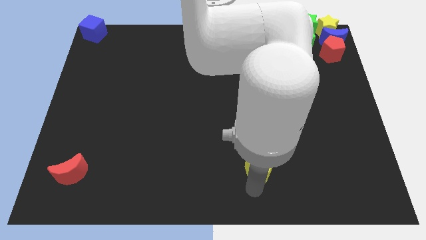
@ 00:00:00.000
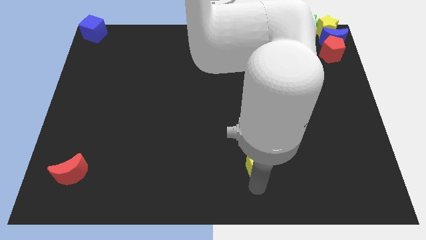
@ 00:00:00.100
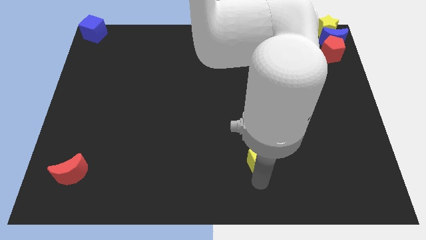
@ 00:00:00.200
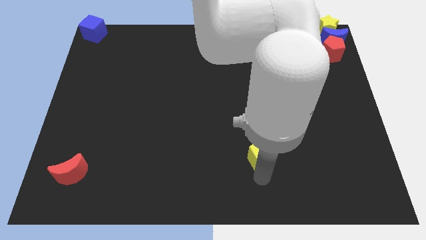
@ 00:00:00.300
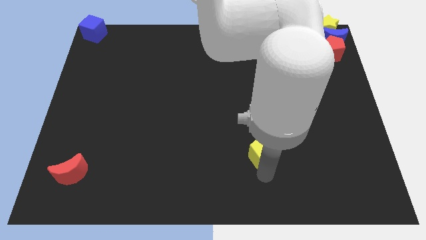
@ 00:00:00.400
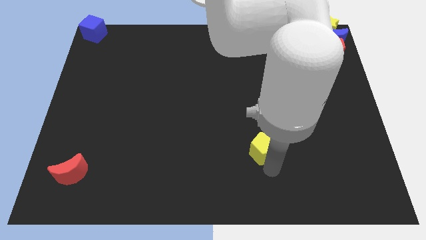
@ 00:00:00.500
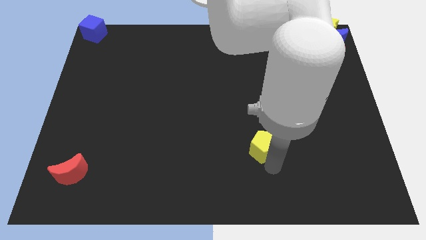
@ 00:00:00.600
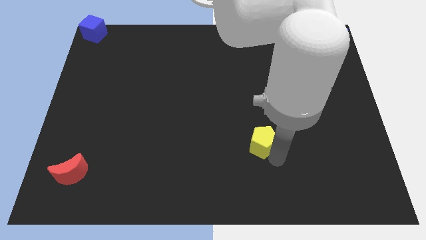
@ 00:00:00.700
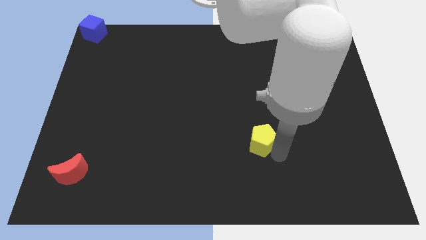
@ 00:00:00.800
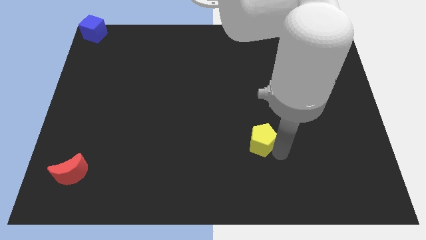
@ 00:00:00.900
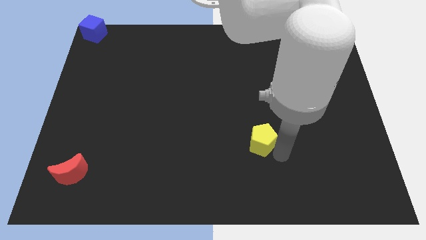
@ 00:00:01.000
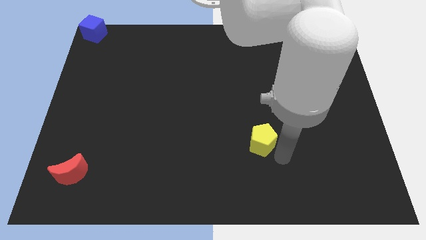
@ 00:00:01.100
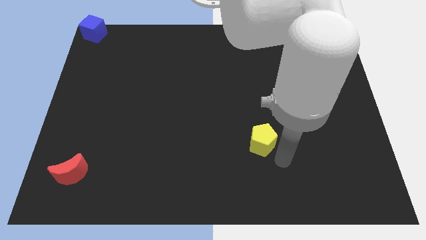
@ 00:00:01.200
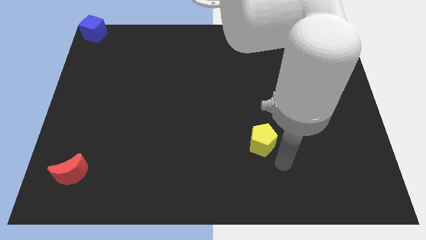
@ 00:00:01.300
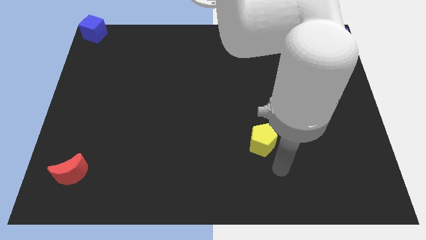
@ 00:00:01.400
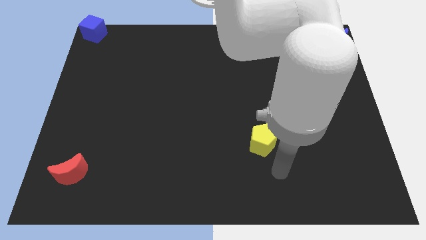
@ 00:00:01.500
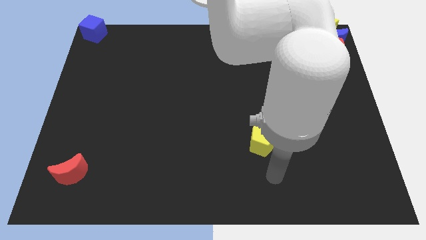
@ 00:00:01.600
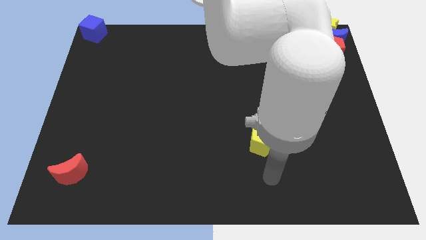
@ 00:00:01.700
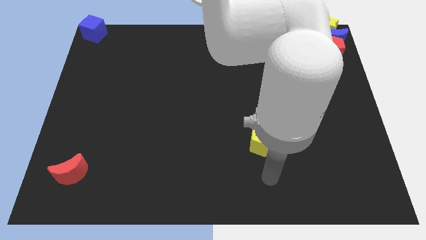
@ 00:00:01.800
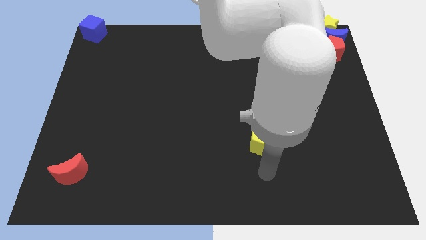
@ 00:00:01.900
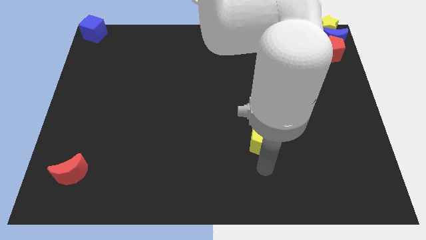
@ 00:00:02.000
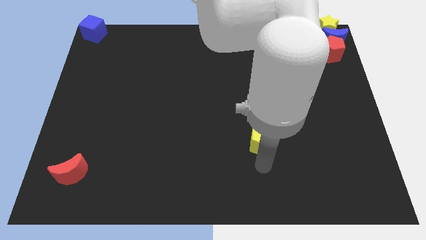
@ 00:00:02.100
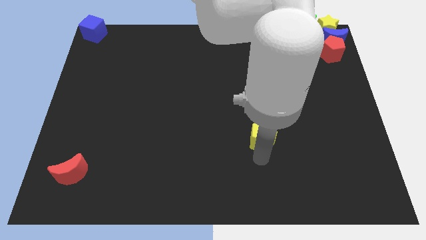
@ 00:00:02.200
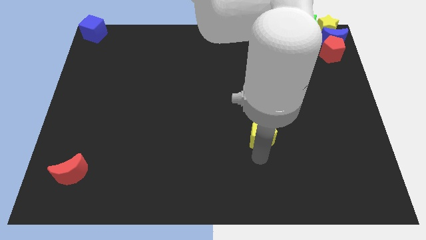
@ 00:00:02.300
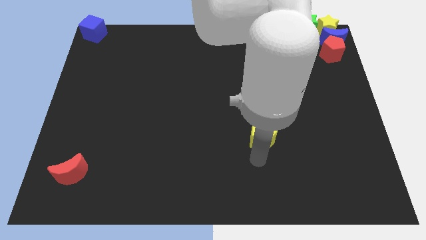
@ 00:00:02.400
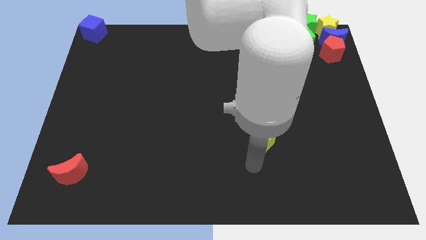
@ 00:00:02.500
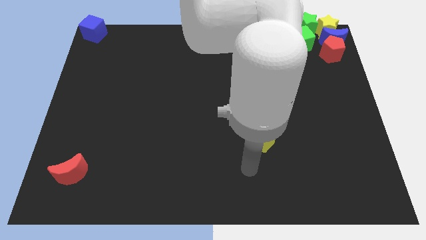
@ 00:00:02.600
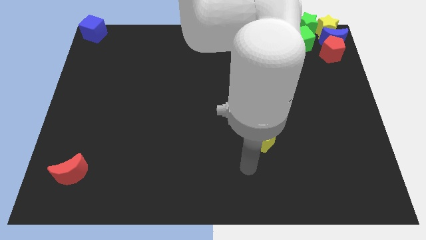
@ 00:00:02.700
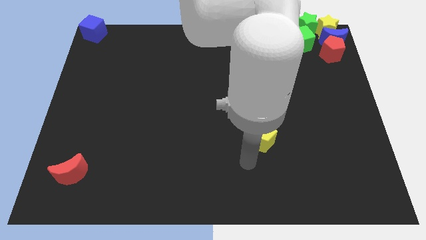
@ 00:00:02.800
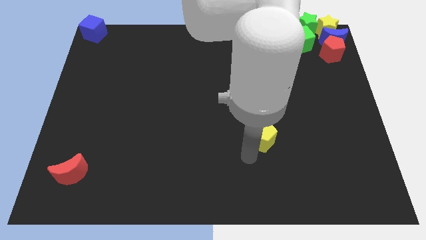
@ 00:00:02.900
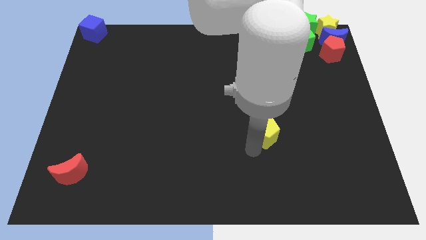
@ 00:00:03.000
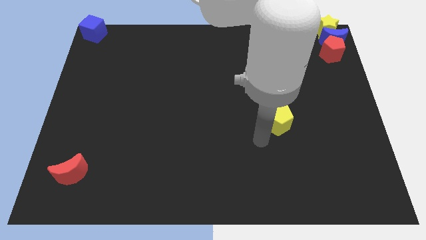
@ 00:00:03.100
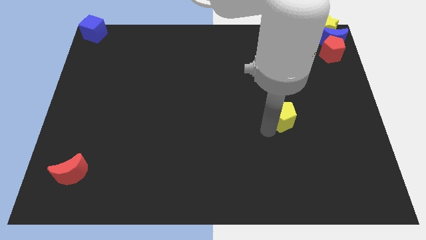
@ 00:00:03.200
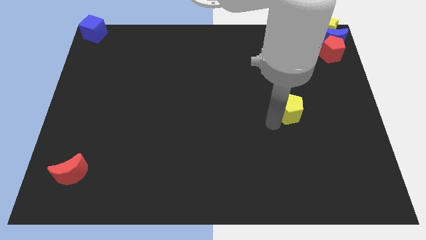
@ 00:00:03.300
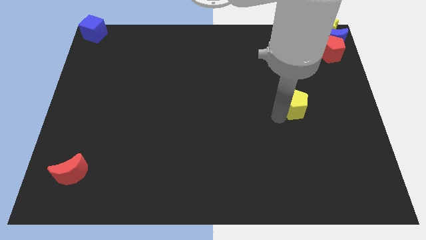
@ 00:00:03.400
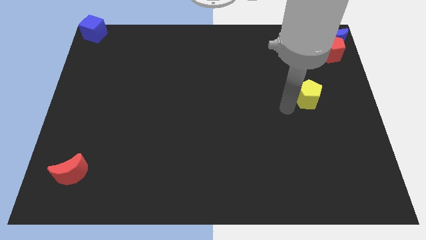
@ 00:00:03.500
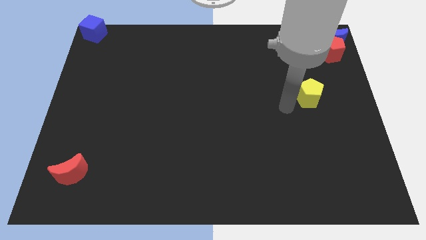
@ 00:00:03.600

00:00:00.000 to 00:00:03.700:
move the yellow pentagon towards upward

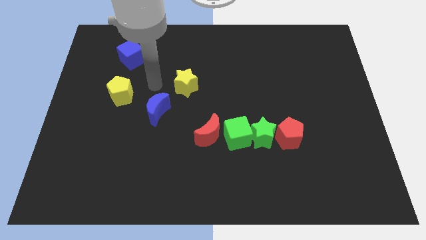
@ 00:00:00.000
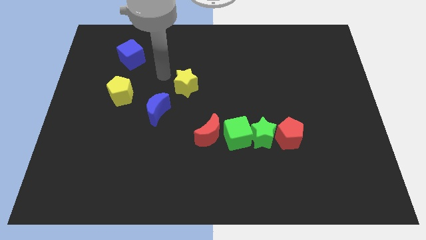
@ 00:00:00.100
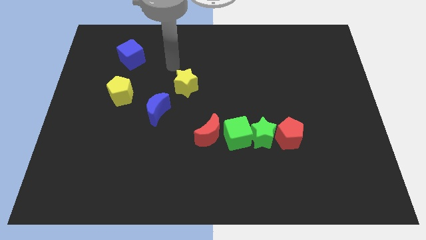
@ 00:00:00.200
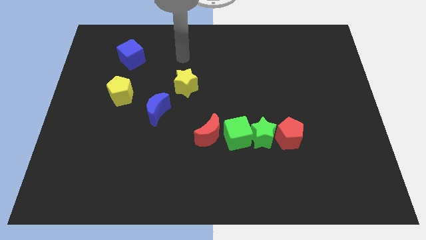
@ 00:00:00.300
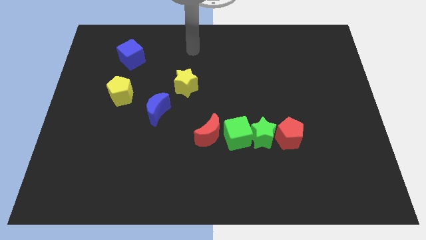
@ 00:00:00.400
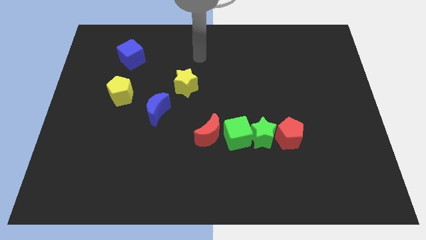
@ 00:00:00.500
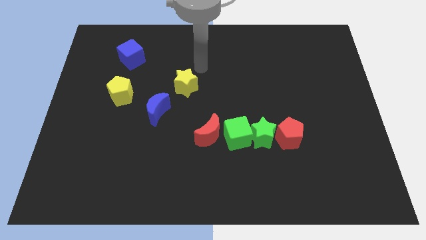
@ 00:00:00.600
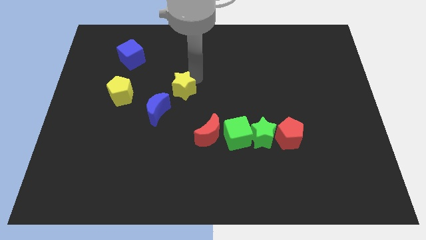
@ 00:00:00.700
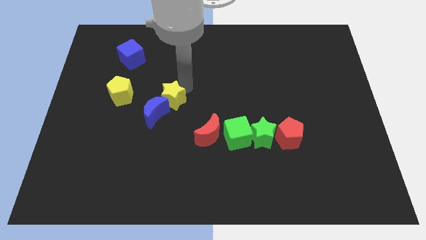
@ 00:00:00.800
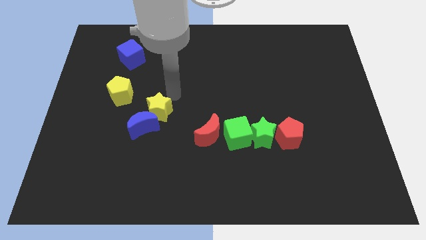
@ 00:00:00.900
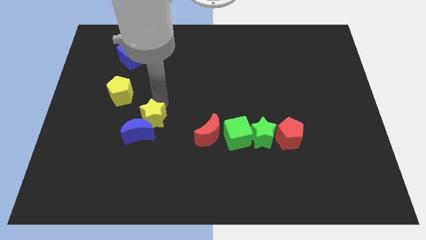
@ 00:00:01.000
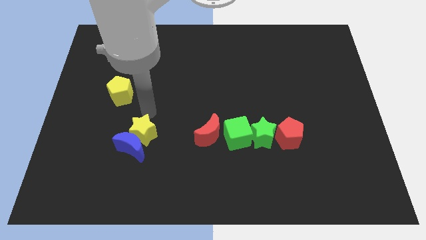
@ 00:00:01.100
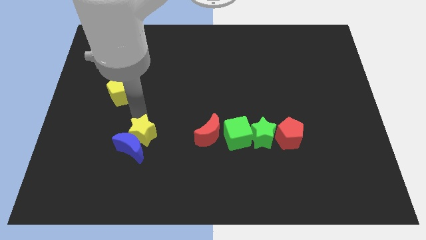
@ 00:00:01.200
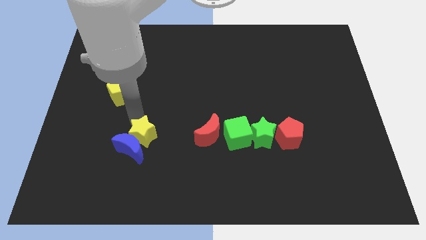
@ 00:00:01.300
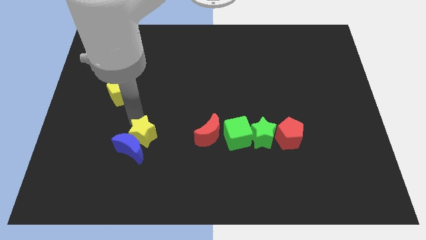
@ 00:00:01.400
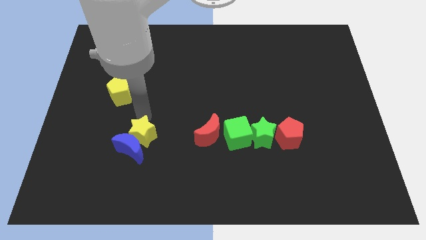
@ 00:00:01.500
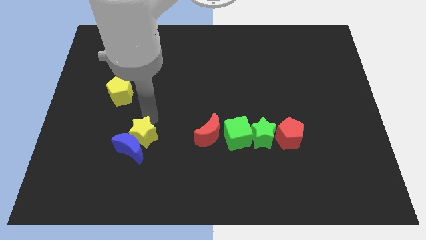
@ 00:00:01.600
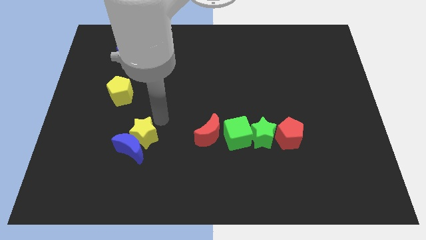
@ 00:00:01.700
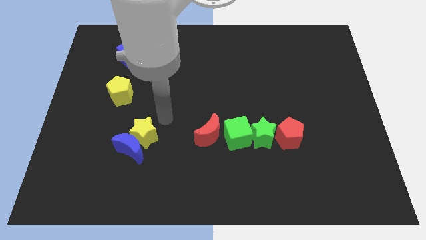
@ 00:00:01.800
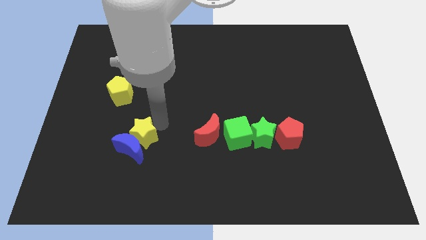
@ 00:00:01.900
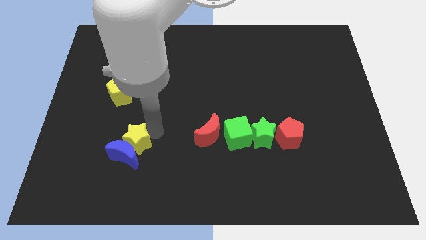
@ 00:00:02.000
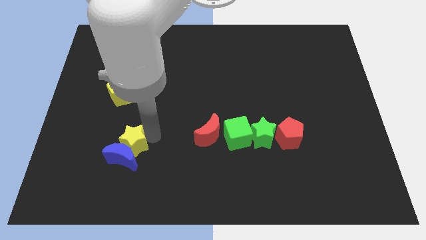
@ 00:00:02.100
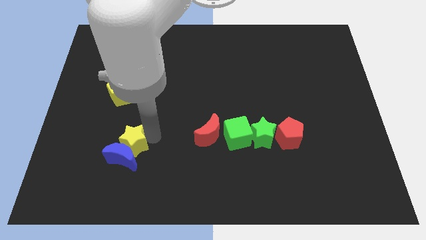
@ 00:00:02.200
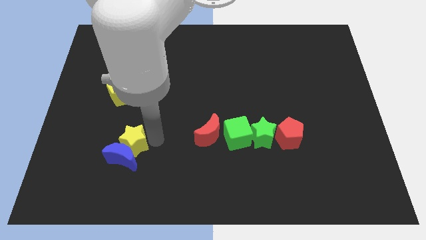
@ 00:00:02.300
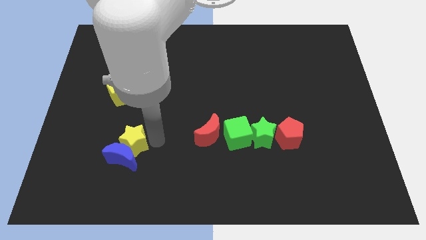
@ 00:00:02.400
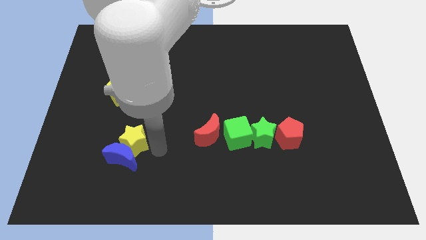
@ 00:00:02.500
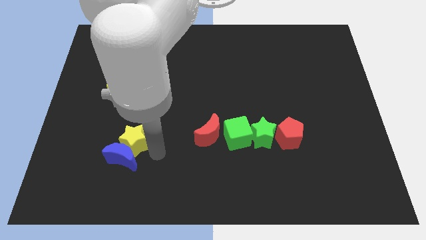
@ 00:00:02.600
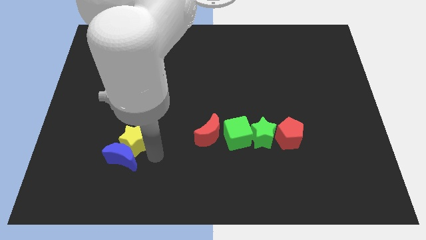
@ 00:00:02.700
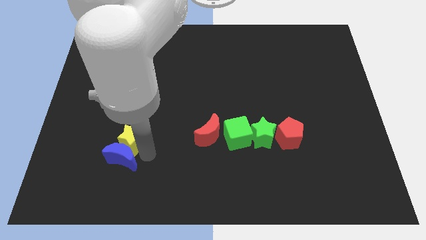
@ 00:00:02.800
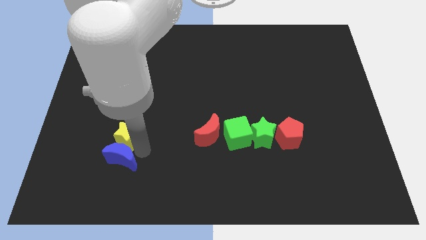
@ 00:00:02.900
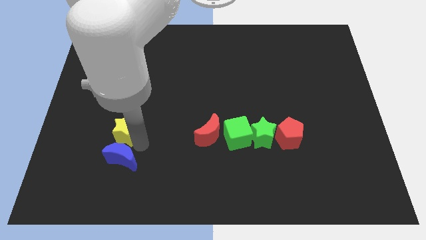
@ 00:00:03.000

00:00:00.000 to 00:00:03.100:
push the yellow star along with the blue crescent to the bottom

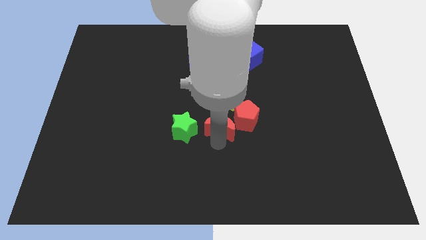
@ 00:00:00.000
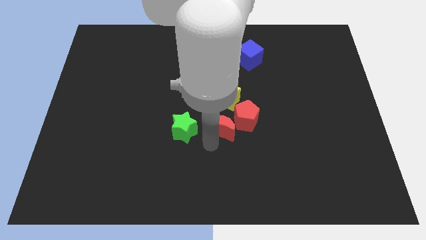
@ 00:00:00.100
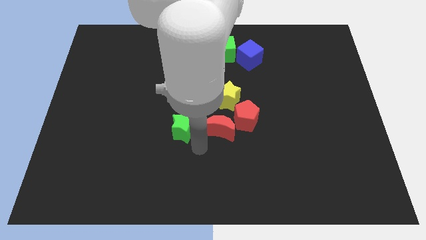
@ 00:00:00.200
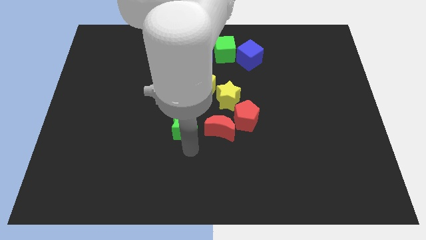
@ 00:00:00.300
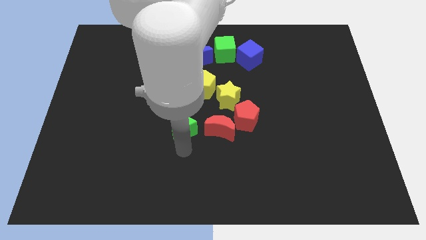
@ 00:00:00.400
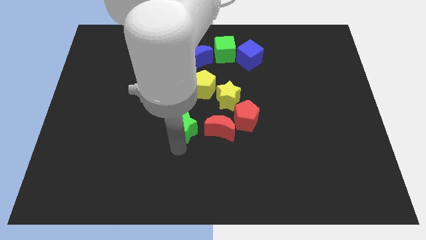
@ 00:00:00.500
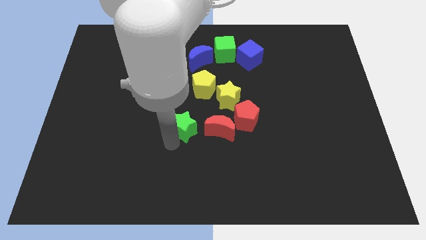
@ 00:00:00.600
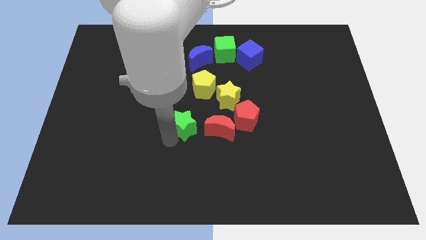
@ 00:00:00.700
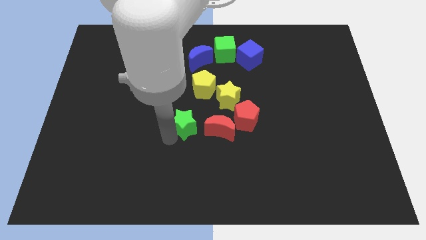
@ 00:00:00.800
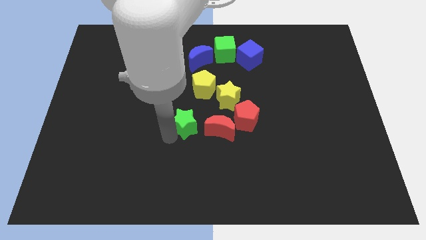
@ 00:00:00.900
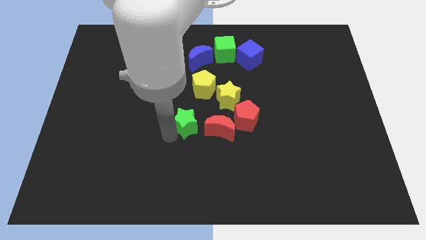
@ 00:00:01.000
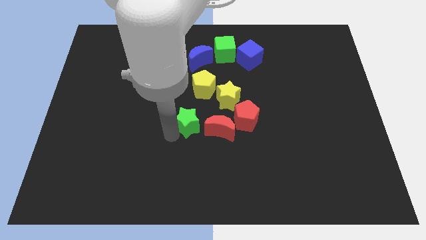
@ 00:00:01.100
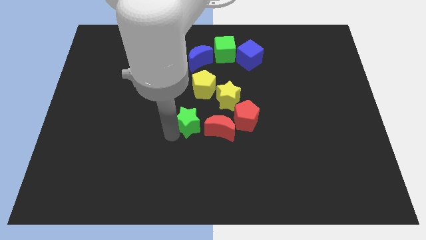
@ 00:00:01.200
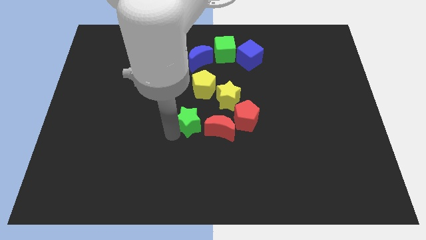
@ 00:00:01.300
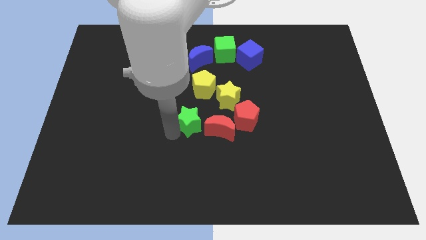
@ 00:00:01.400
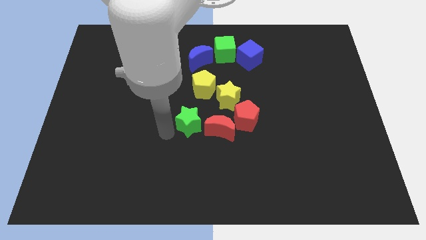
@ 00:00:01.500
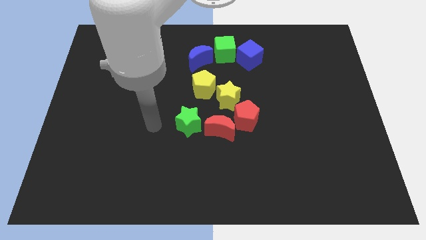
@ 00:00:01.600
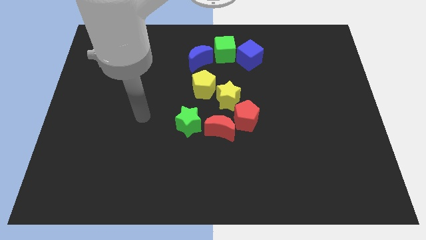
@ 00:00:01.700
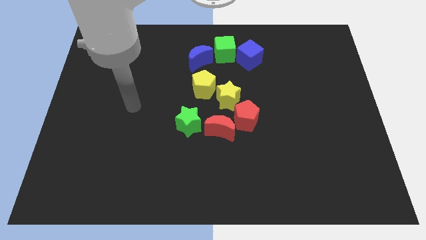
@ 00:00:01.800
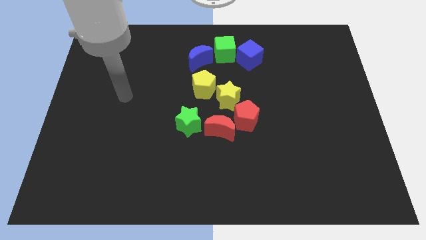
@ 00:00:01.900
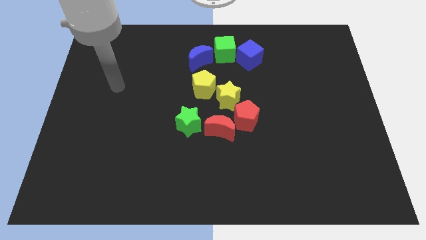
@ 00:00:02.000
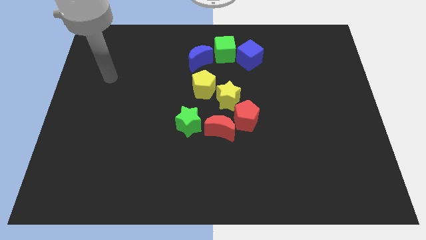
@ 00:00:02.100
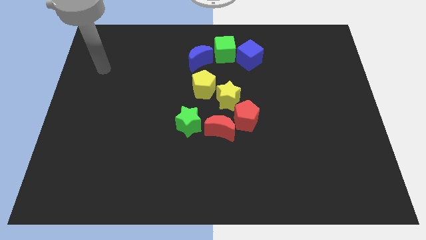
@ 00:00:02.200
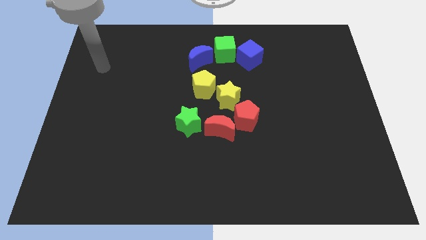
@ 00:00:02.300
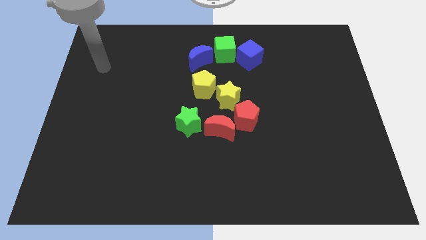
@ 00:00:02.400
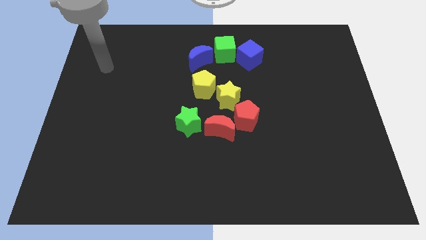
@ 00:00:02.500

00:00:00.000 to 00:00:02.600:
slide up the green star to the center
